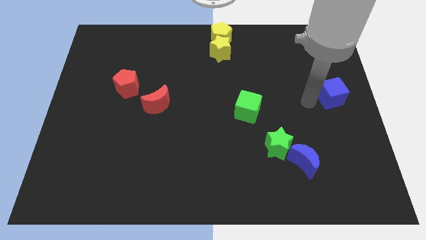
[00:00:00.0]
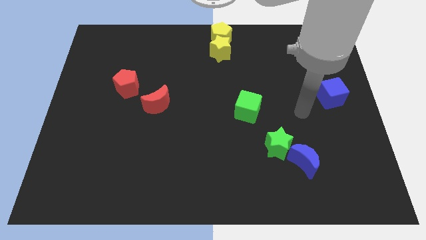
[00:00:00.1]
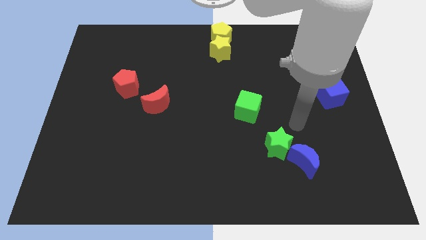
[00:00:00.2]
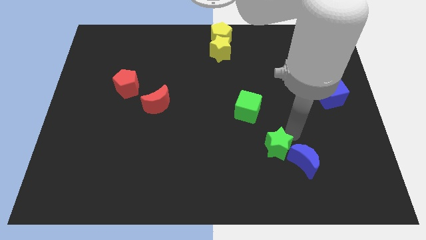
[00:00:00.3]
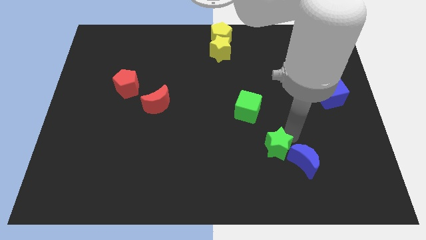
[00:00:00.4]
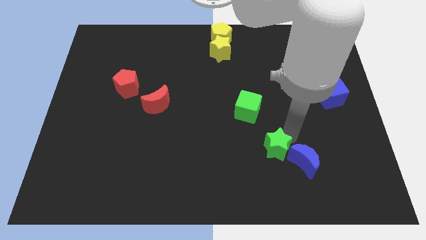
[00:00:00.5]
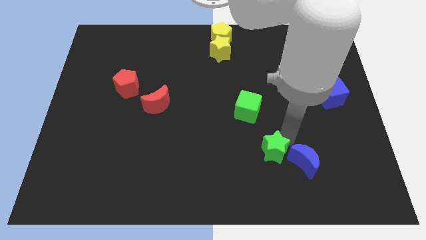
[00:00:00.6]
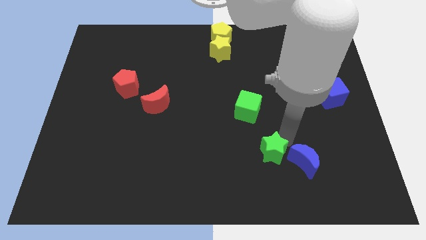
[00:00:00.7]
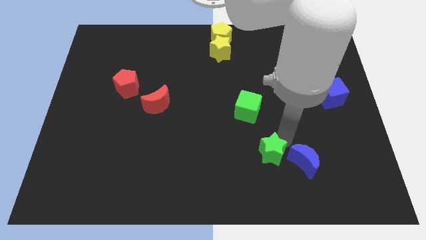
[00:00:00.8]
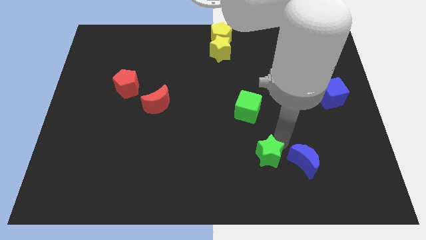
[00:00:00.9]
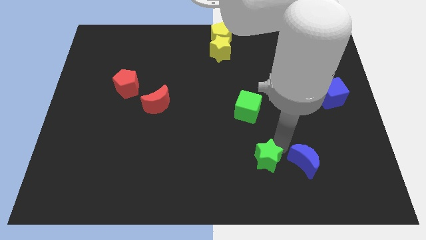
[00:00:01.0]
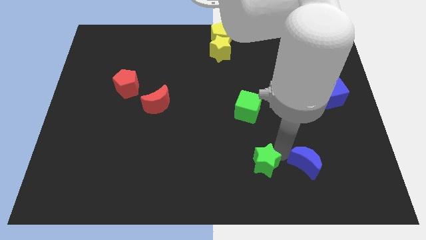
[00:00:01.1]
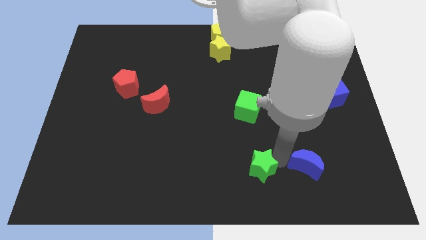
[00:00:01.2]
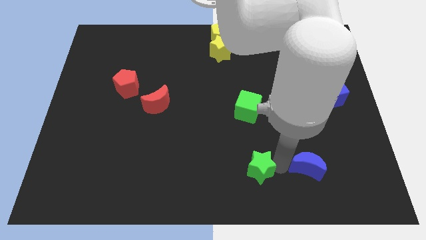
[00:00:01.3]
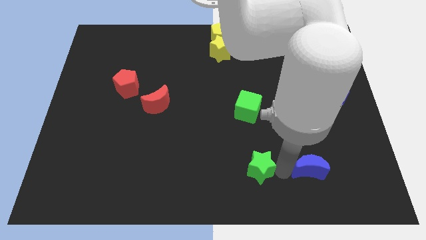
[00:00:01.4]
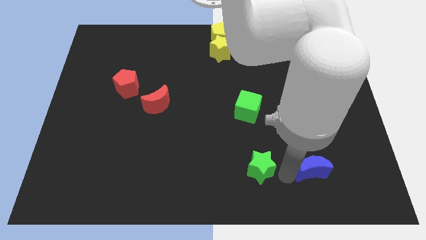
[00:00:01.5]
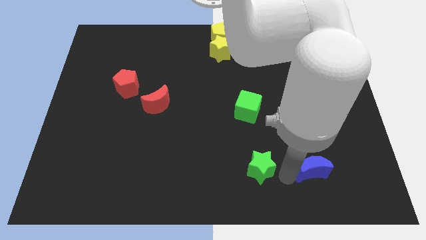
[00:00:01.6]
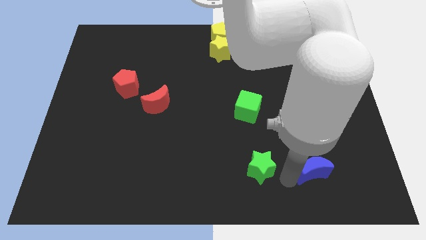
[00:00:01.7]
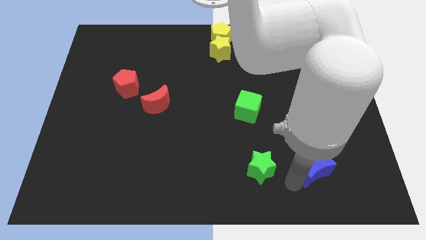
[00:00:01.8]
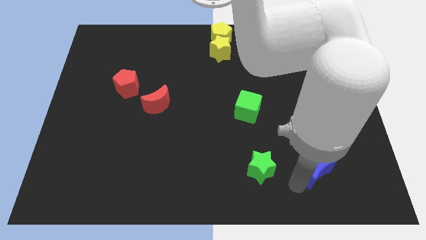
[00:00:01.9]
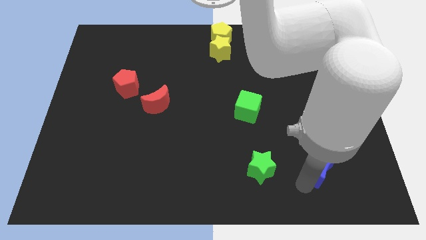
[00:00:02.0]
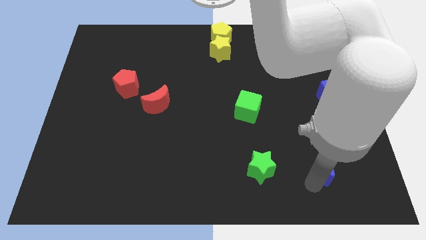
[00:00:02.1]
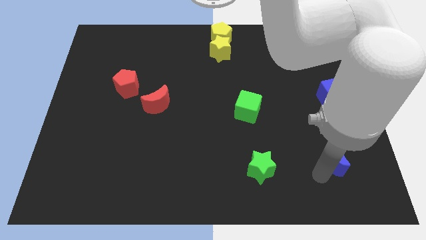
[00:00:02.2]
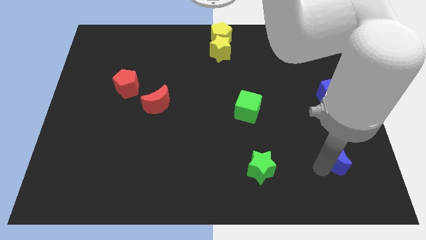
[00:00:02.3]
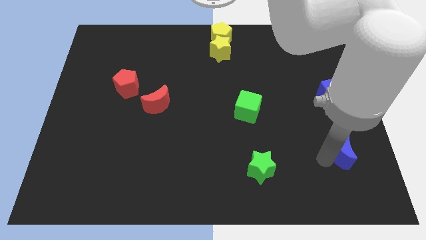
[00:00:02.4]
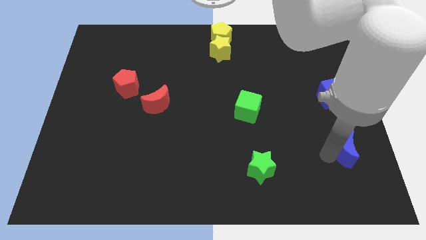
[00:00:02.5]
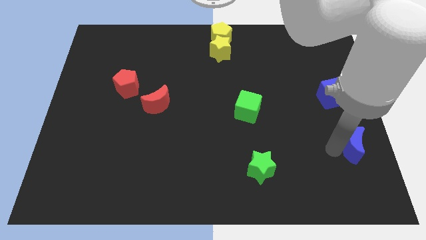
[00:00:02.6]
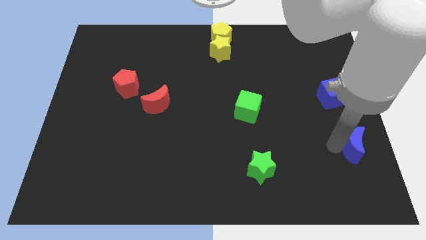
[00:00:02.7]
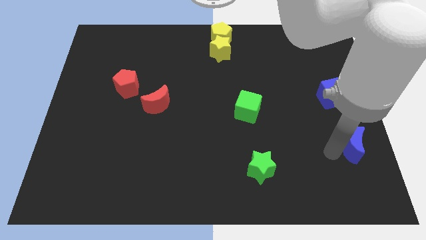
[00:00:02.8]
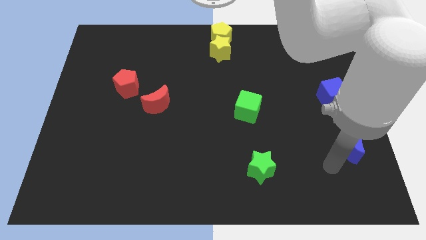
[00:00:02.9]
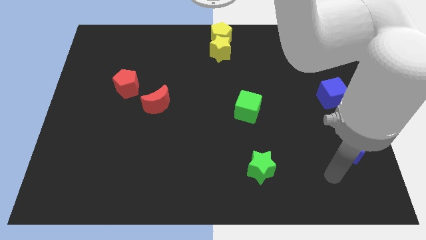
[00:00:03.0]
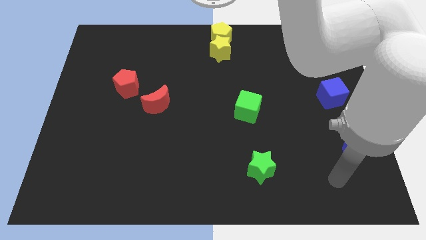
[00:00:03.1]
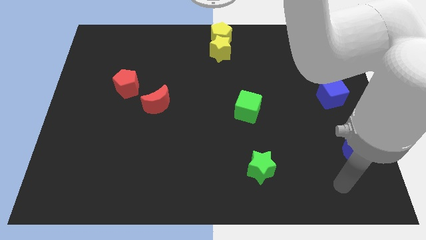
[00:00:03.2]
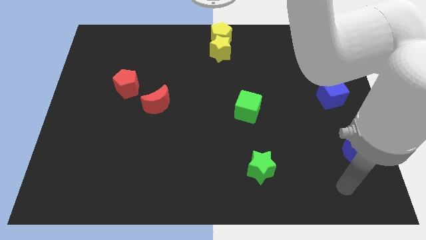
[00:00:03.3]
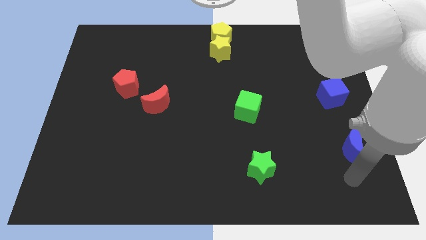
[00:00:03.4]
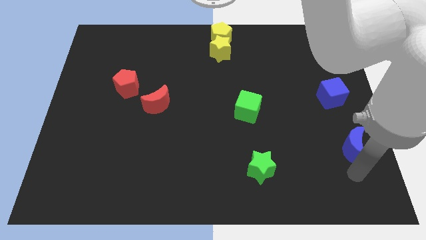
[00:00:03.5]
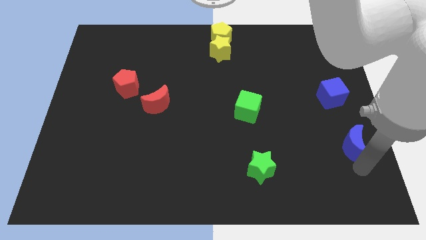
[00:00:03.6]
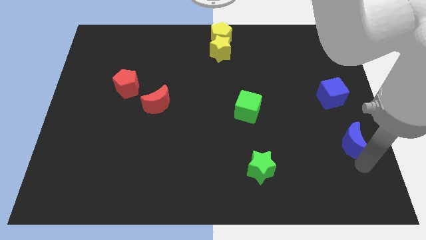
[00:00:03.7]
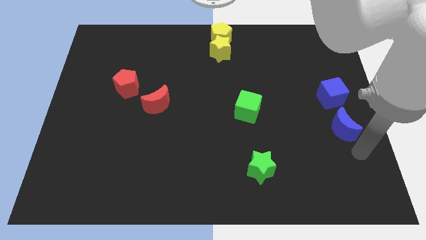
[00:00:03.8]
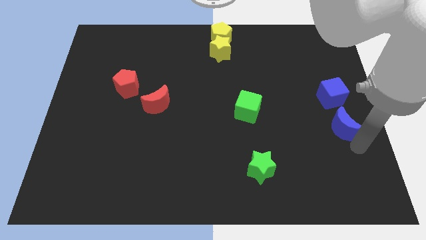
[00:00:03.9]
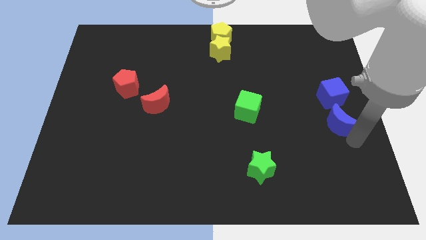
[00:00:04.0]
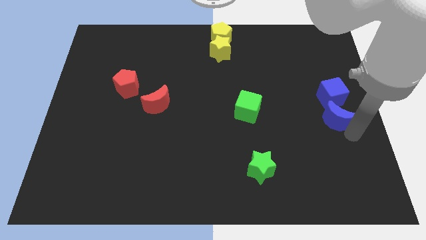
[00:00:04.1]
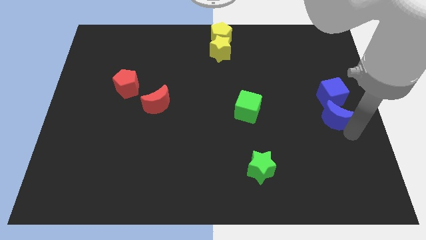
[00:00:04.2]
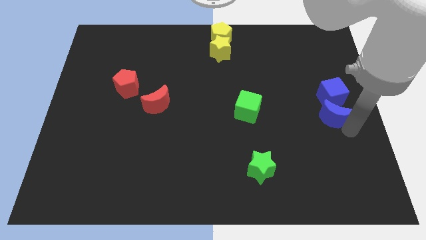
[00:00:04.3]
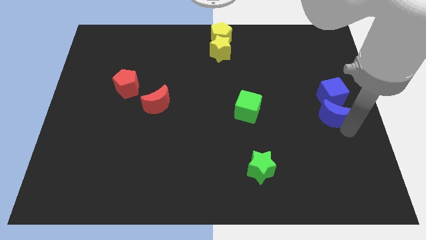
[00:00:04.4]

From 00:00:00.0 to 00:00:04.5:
place the blue crescent below the blue cube

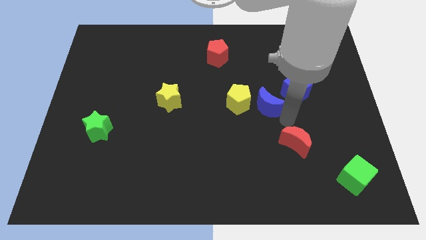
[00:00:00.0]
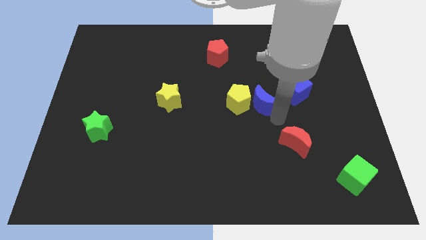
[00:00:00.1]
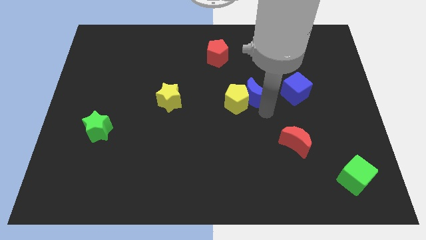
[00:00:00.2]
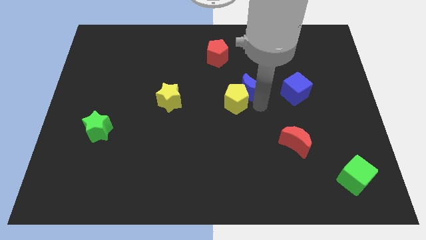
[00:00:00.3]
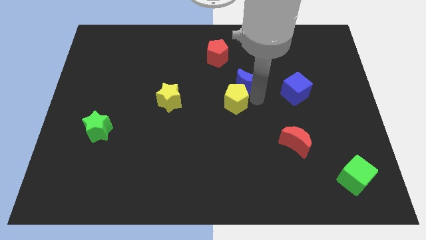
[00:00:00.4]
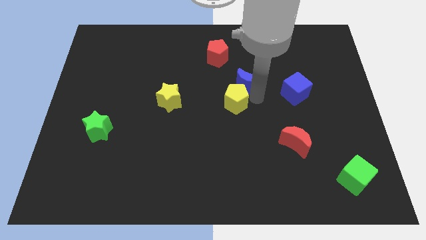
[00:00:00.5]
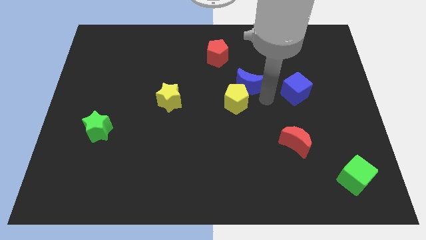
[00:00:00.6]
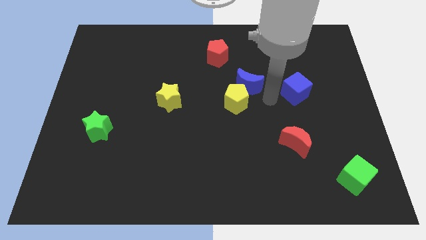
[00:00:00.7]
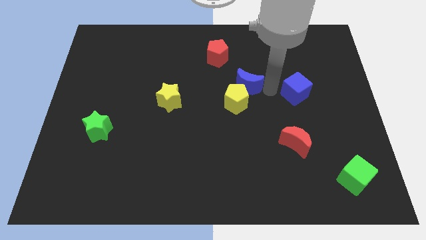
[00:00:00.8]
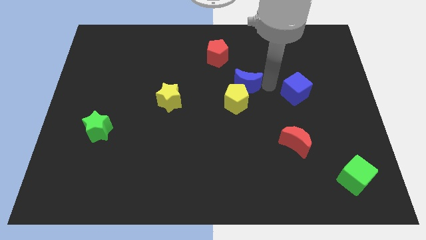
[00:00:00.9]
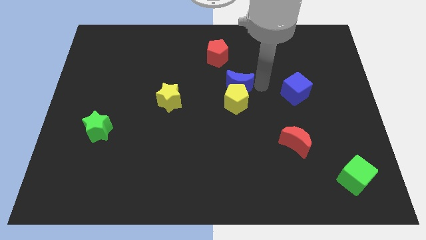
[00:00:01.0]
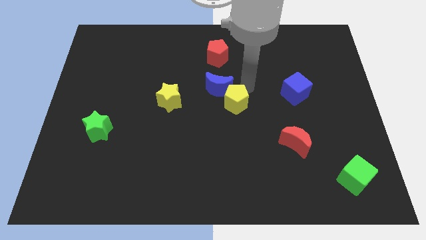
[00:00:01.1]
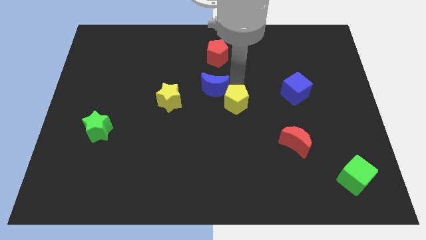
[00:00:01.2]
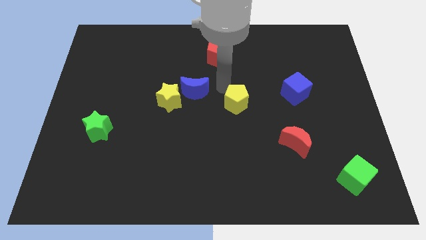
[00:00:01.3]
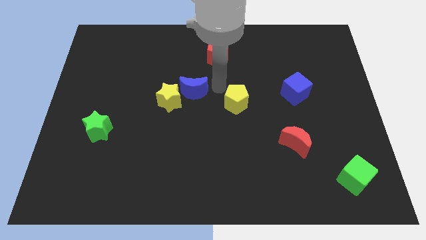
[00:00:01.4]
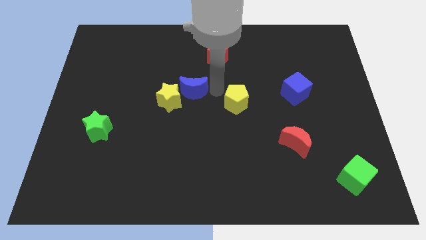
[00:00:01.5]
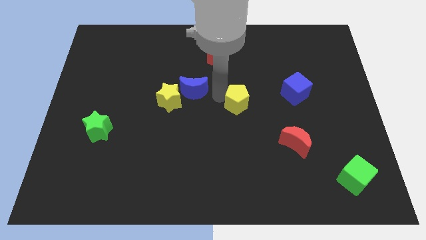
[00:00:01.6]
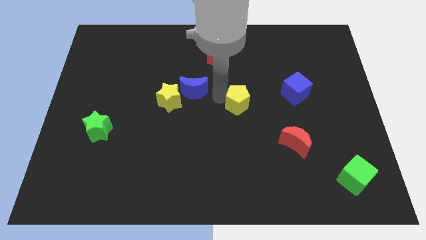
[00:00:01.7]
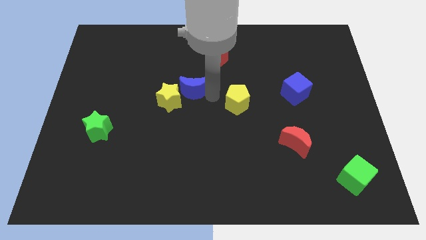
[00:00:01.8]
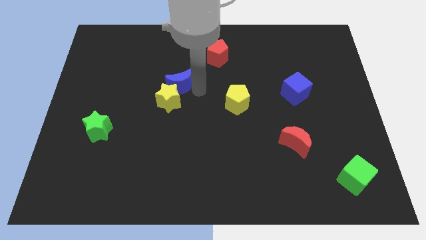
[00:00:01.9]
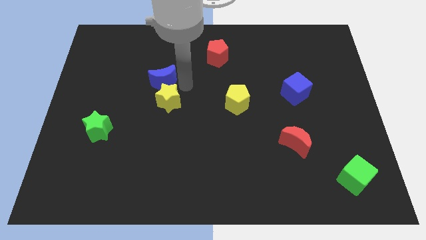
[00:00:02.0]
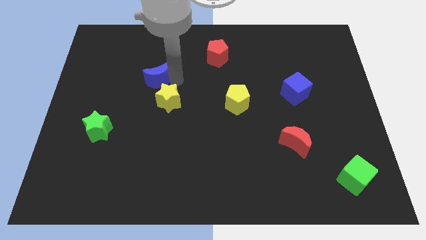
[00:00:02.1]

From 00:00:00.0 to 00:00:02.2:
move the blue moon on top of yellow star

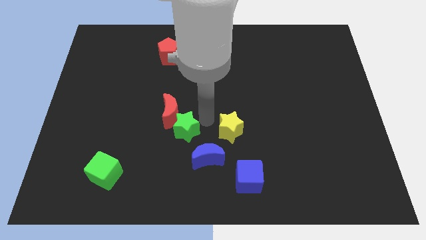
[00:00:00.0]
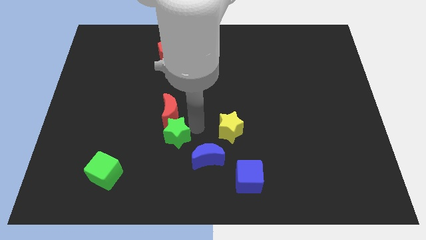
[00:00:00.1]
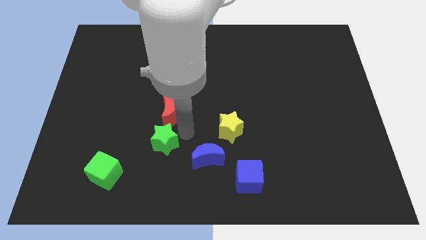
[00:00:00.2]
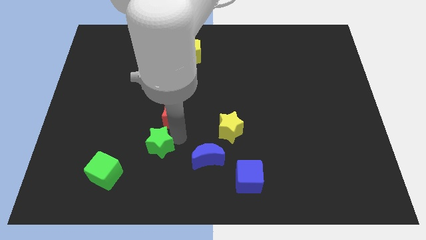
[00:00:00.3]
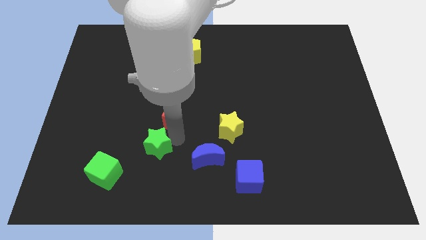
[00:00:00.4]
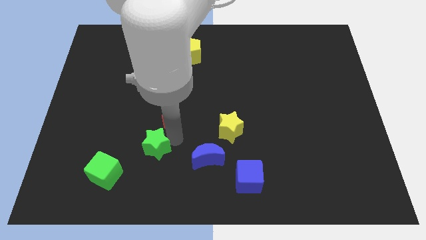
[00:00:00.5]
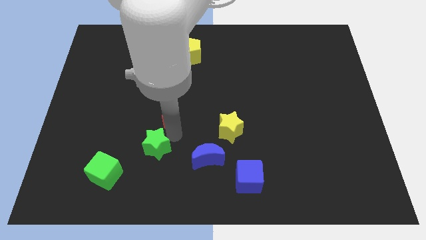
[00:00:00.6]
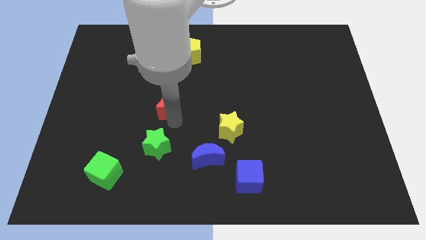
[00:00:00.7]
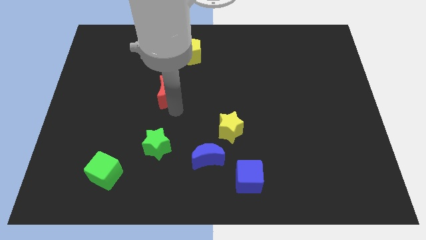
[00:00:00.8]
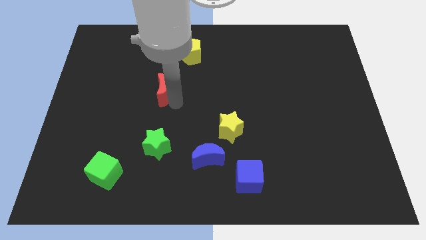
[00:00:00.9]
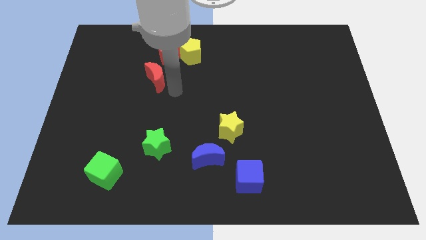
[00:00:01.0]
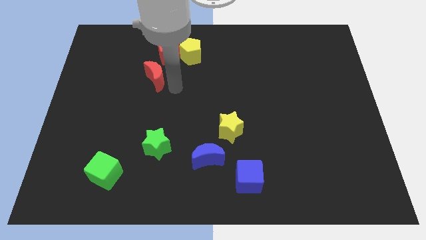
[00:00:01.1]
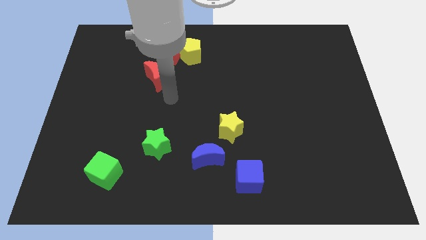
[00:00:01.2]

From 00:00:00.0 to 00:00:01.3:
slightly move the red moon up

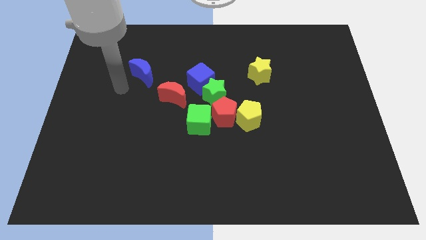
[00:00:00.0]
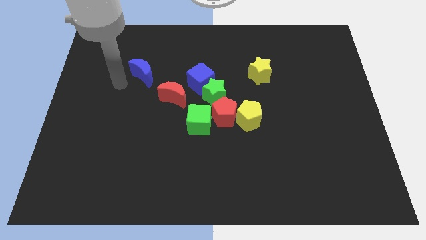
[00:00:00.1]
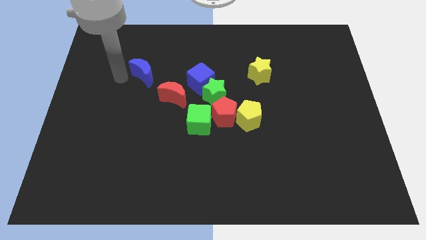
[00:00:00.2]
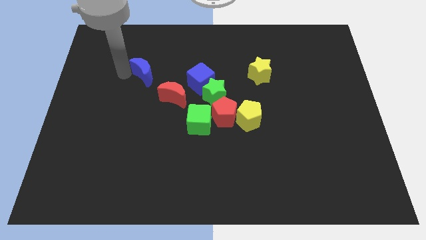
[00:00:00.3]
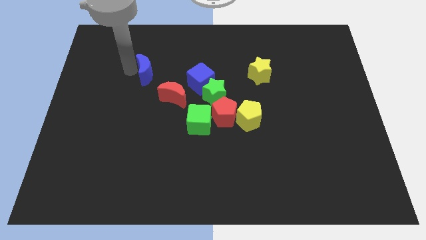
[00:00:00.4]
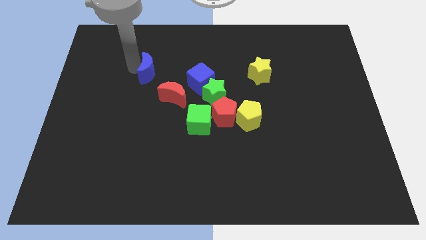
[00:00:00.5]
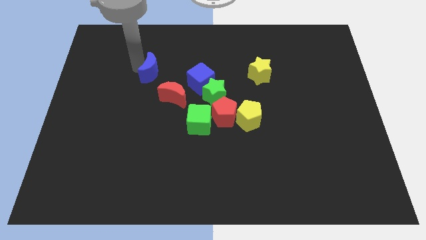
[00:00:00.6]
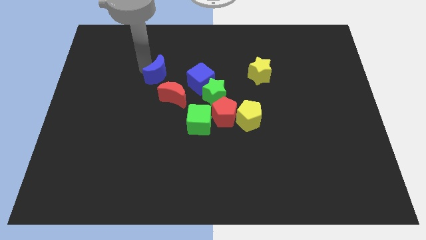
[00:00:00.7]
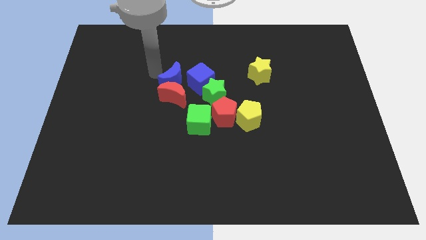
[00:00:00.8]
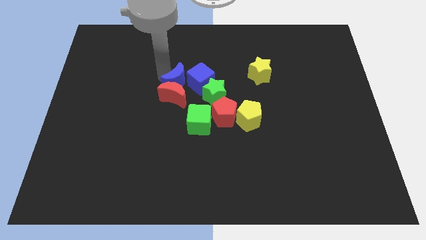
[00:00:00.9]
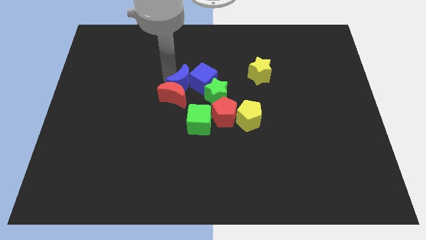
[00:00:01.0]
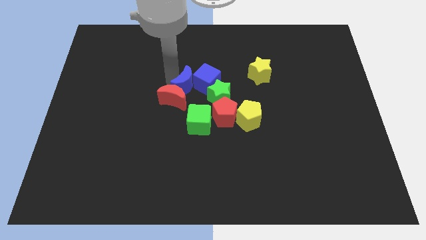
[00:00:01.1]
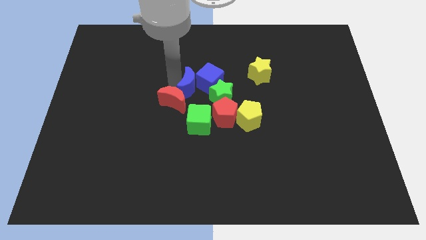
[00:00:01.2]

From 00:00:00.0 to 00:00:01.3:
move the blue crescent towards the group of objects
